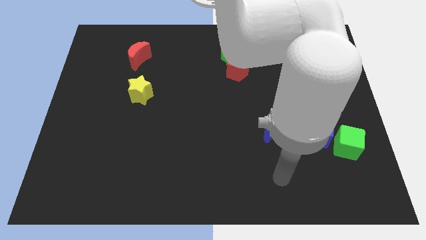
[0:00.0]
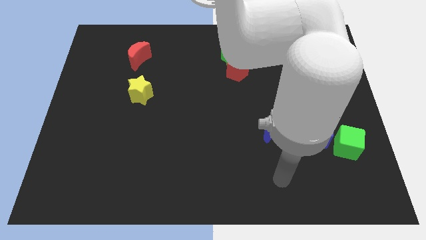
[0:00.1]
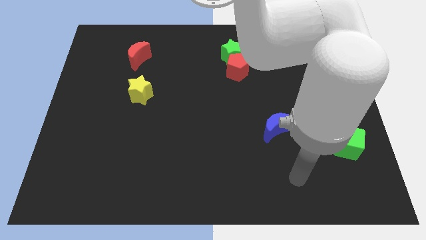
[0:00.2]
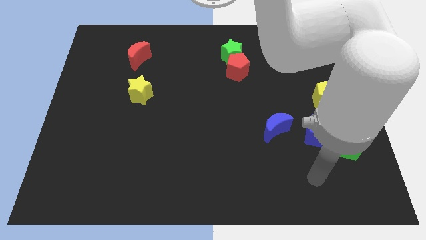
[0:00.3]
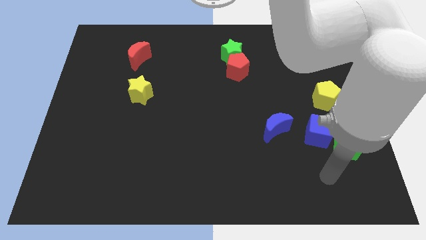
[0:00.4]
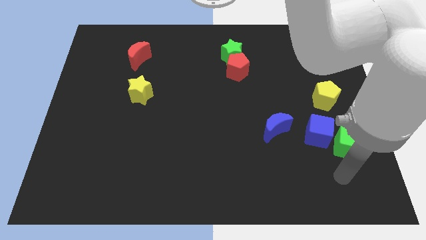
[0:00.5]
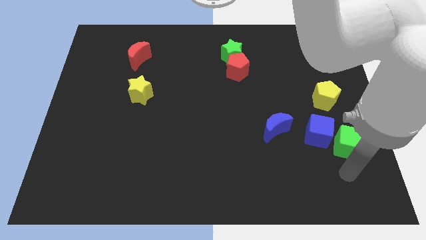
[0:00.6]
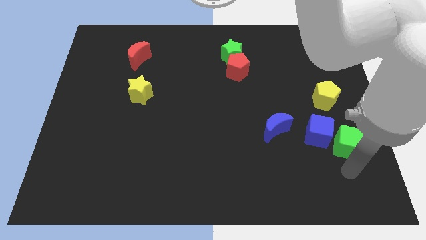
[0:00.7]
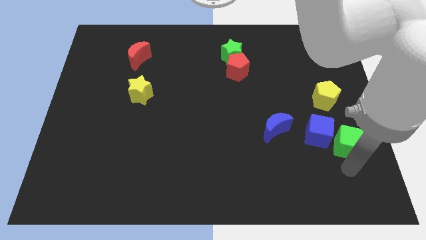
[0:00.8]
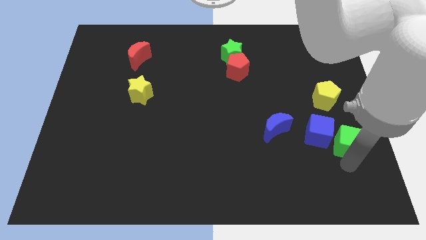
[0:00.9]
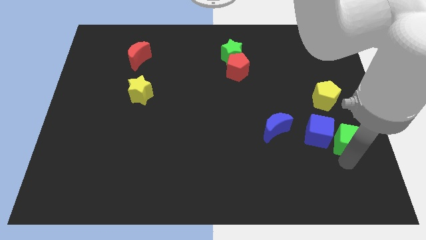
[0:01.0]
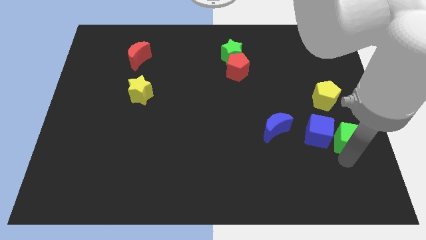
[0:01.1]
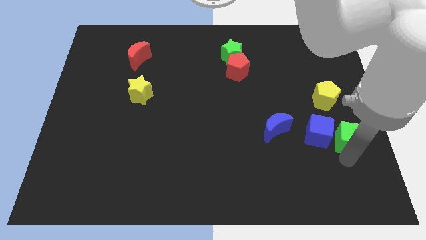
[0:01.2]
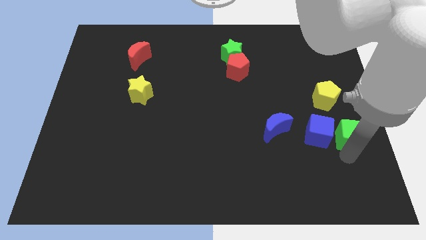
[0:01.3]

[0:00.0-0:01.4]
move your arm to the bottom of the green cube

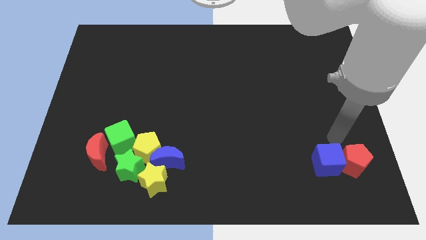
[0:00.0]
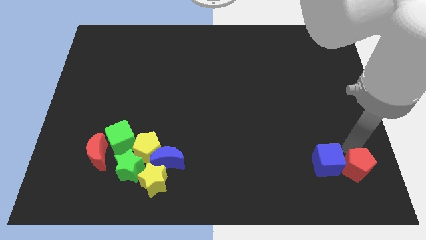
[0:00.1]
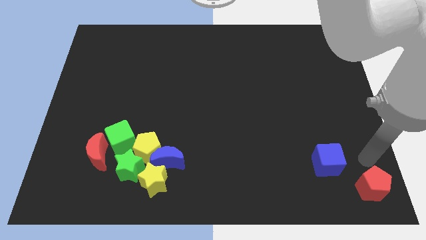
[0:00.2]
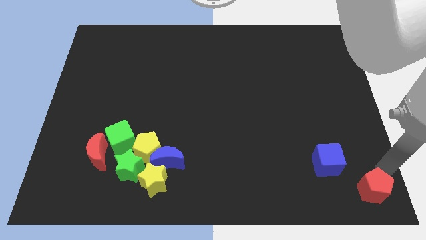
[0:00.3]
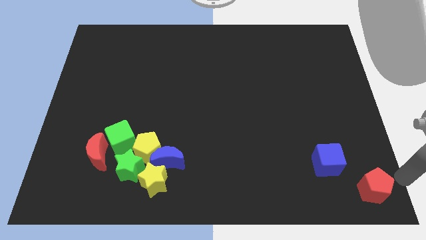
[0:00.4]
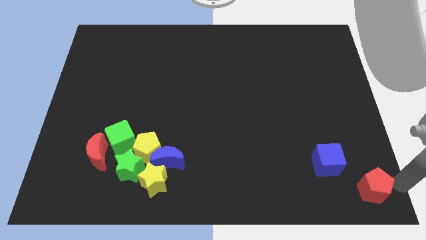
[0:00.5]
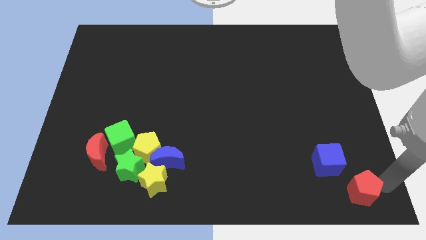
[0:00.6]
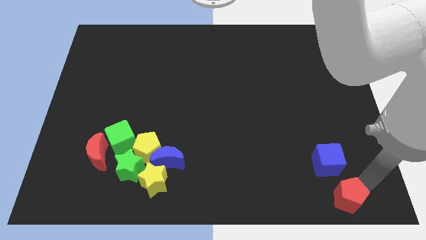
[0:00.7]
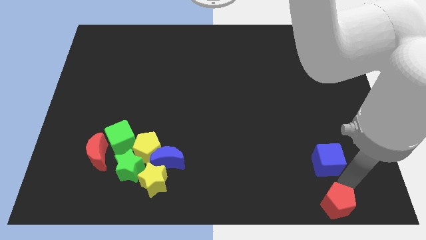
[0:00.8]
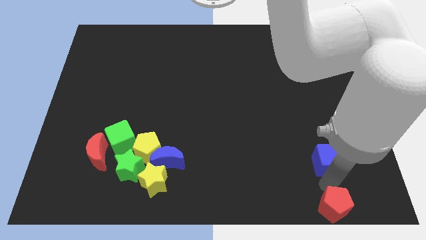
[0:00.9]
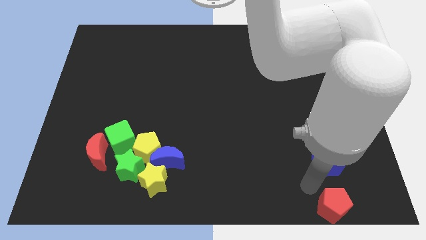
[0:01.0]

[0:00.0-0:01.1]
move the red pentagon to the bottom of the blue cube

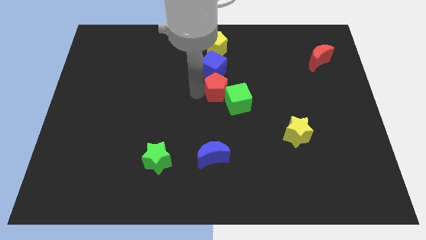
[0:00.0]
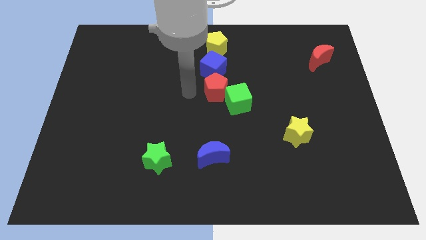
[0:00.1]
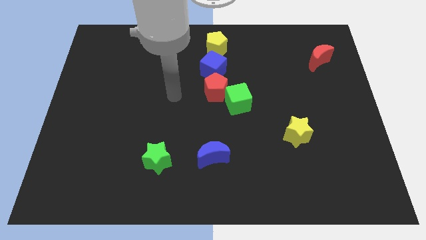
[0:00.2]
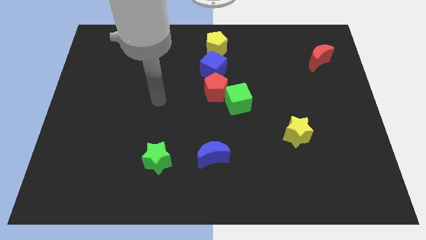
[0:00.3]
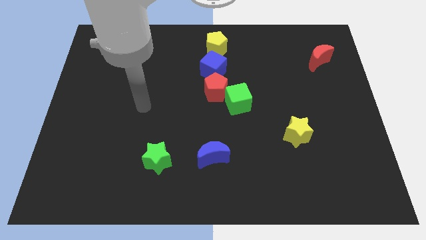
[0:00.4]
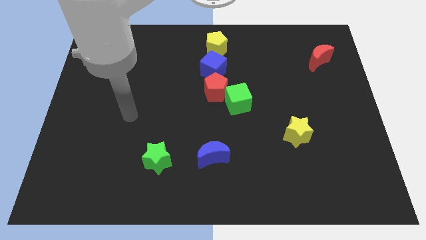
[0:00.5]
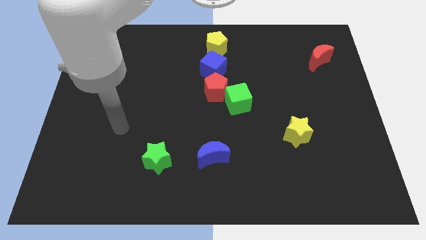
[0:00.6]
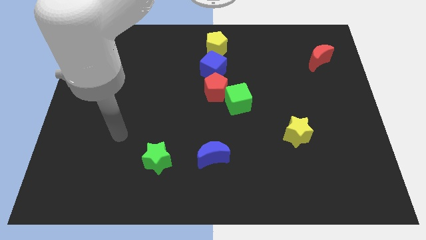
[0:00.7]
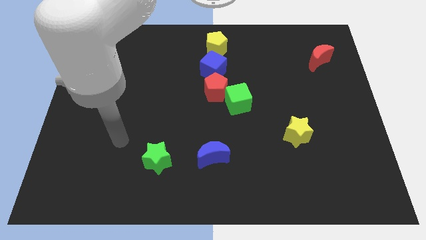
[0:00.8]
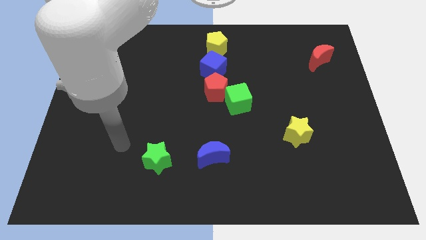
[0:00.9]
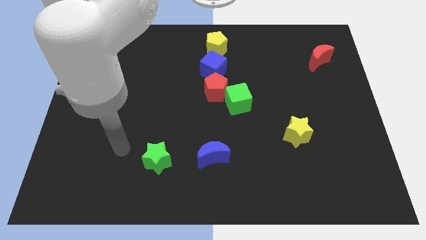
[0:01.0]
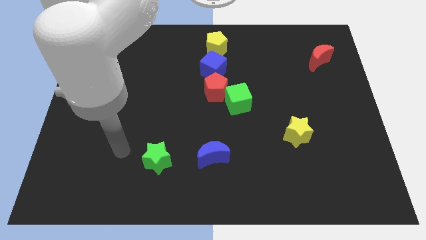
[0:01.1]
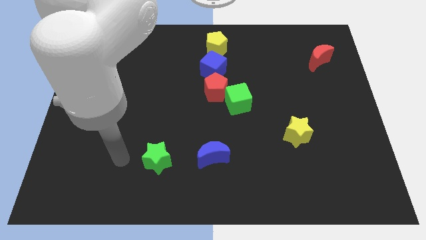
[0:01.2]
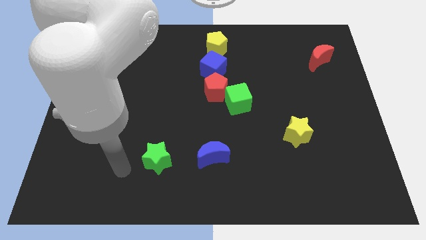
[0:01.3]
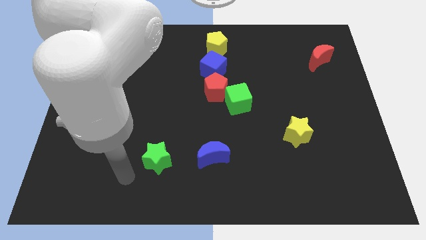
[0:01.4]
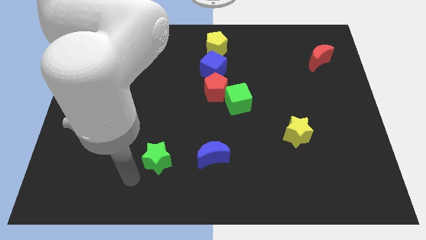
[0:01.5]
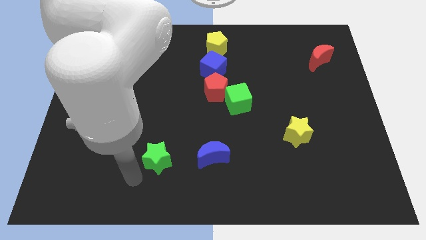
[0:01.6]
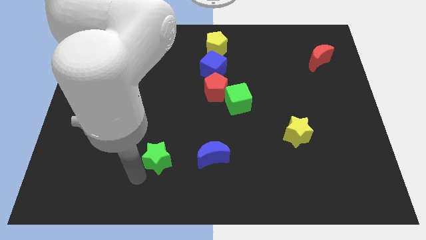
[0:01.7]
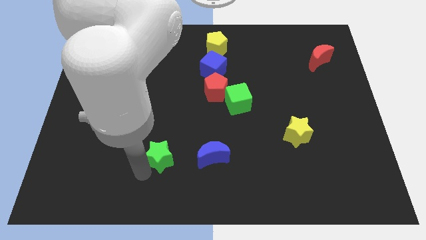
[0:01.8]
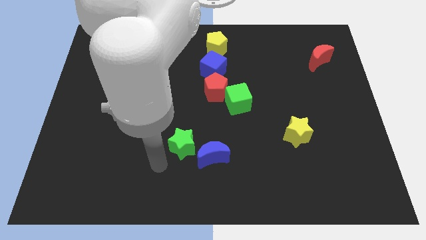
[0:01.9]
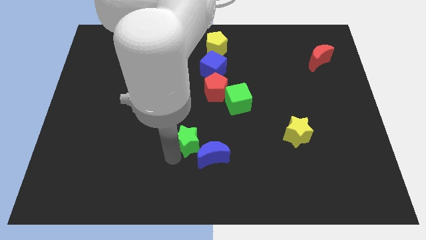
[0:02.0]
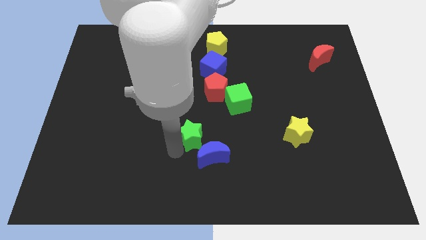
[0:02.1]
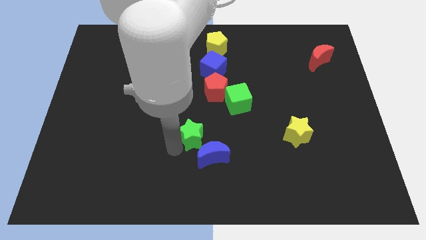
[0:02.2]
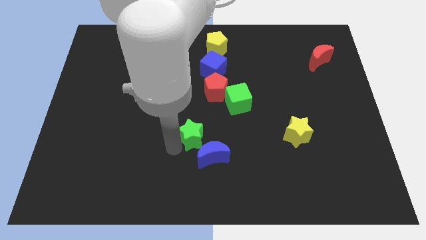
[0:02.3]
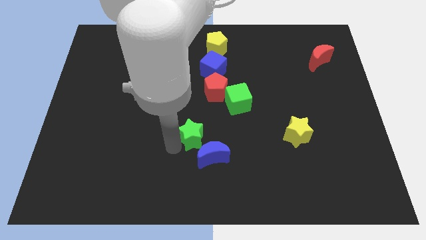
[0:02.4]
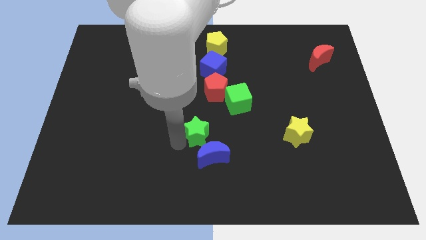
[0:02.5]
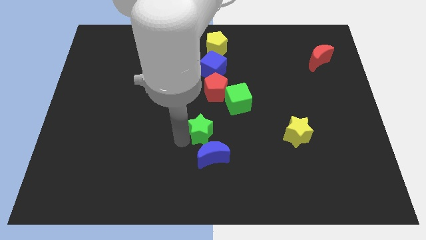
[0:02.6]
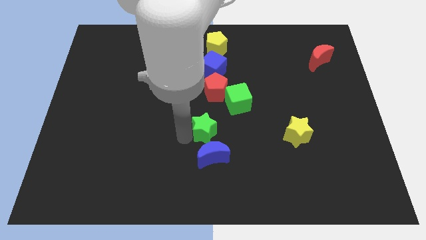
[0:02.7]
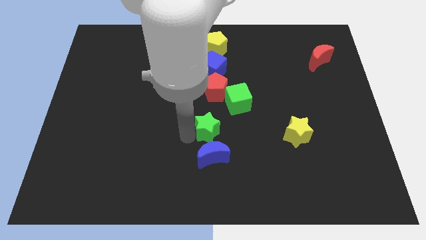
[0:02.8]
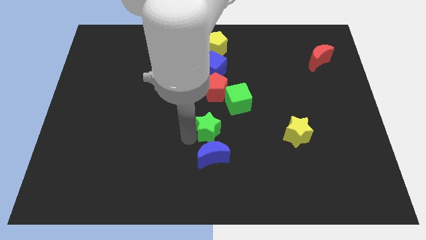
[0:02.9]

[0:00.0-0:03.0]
push the green star to the top of the blue crescent

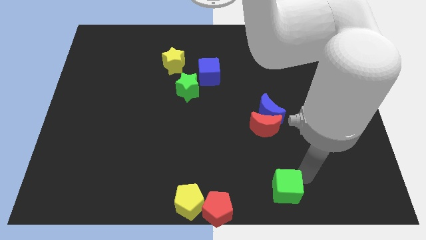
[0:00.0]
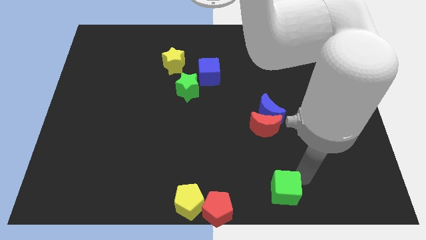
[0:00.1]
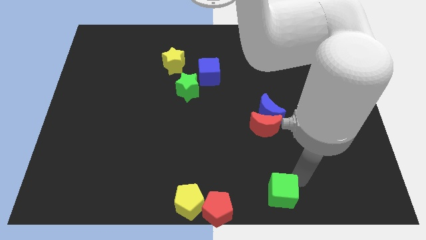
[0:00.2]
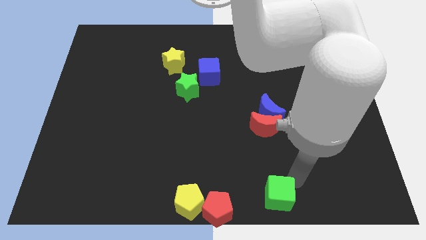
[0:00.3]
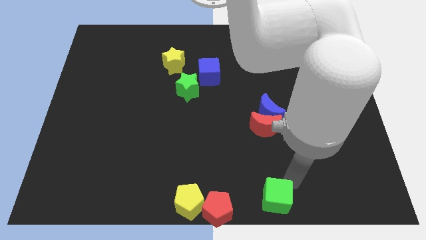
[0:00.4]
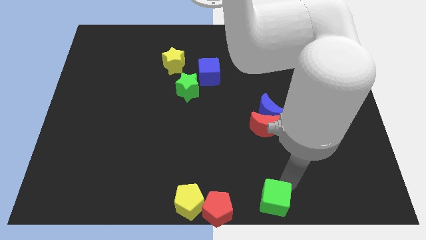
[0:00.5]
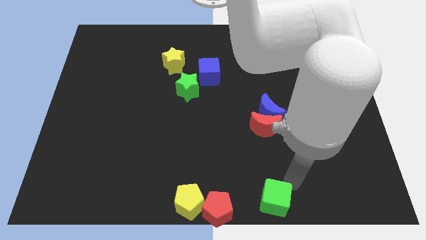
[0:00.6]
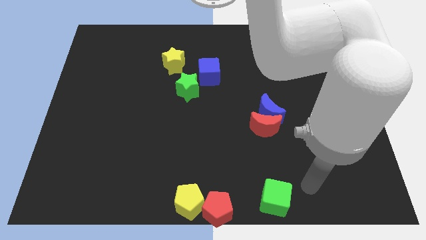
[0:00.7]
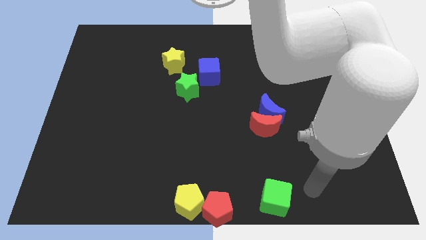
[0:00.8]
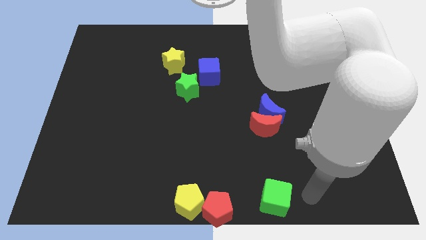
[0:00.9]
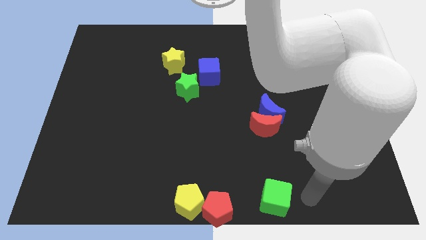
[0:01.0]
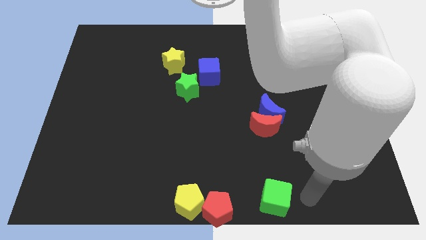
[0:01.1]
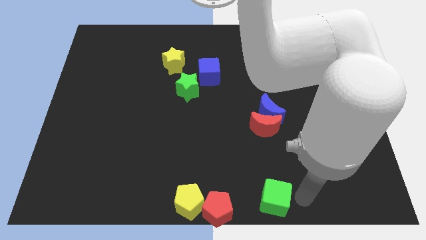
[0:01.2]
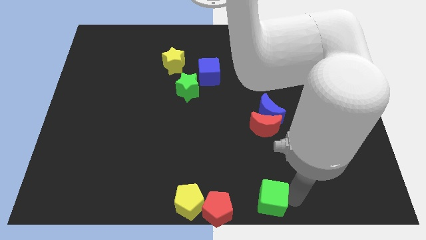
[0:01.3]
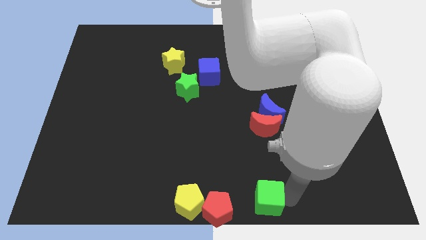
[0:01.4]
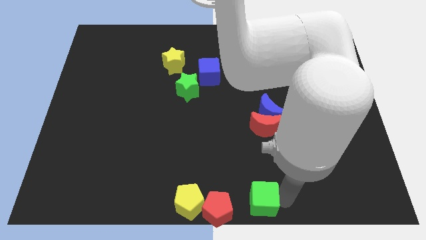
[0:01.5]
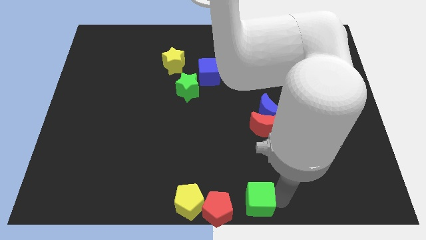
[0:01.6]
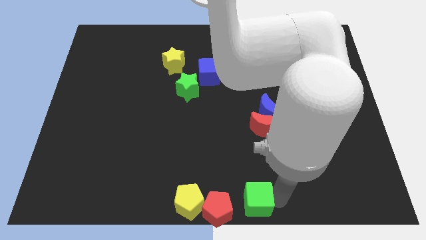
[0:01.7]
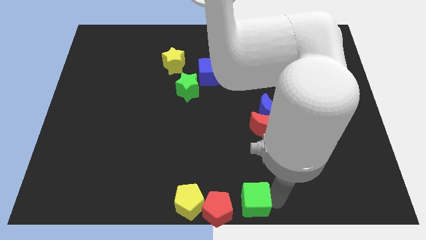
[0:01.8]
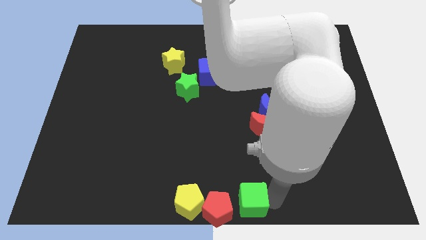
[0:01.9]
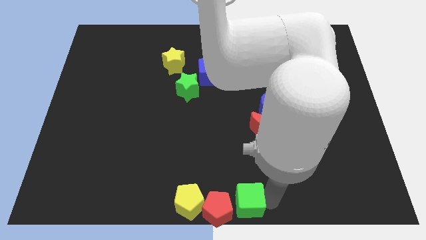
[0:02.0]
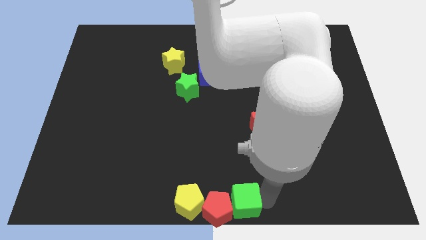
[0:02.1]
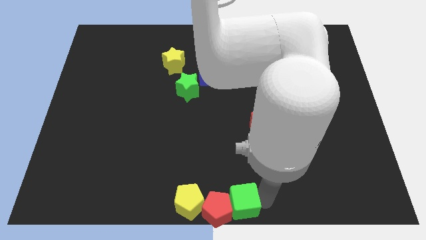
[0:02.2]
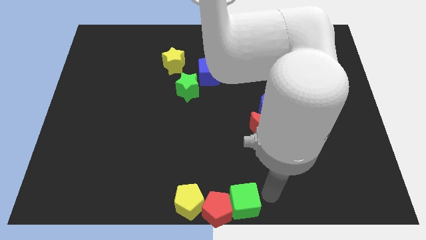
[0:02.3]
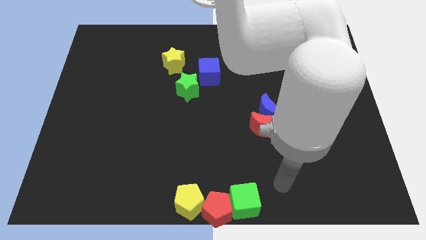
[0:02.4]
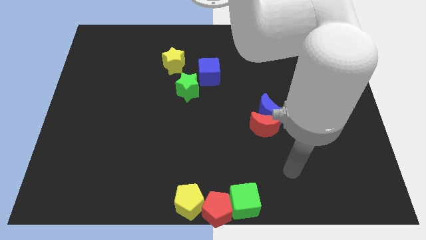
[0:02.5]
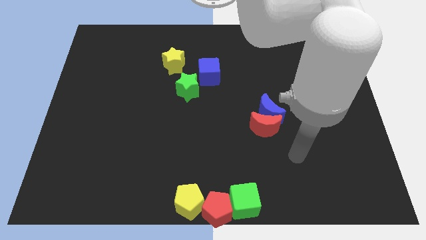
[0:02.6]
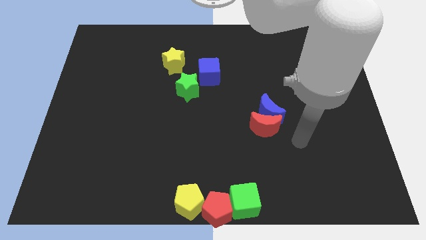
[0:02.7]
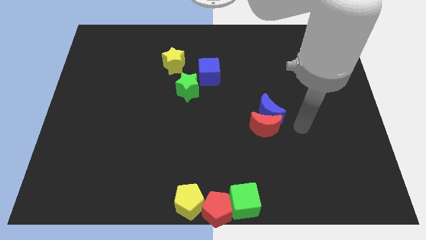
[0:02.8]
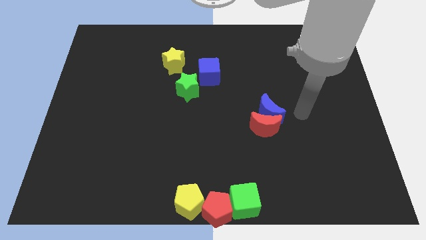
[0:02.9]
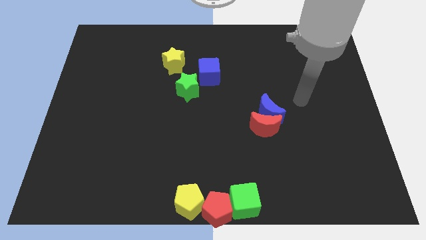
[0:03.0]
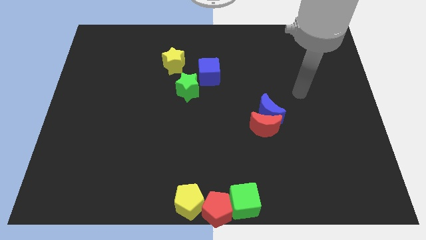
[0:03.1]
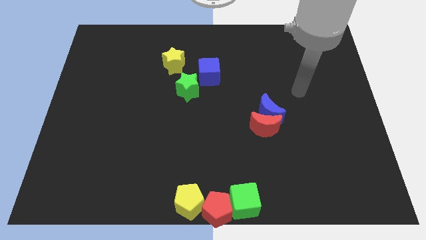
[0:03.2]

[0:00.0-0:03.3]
push the green cube into the red pentagon

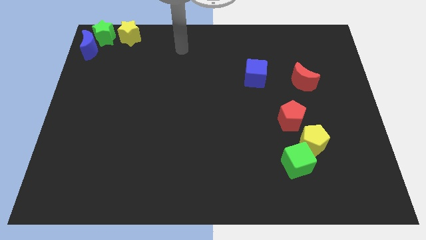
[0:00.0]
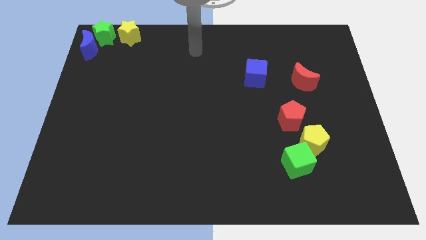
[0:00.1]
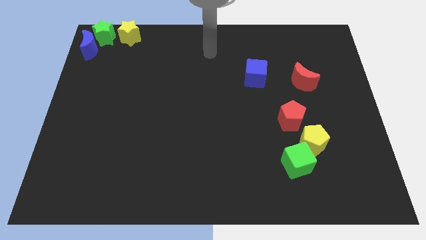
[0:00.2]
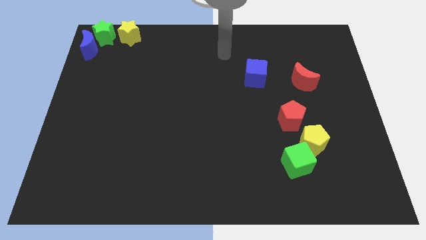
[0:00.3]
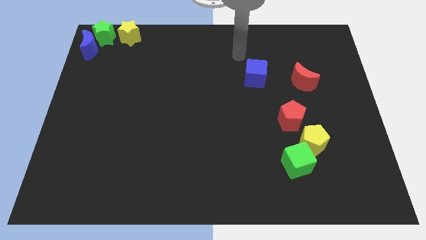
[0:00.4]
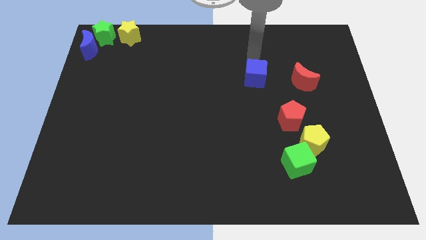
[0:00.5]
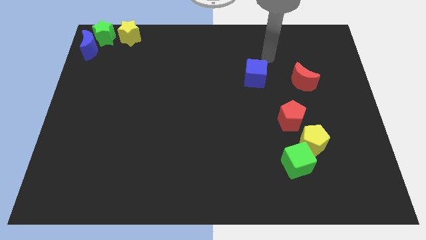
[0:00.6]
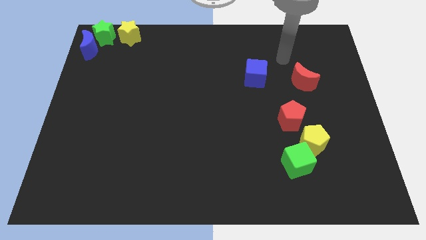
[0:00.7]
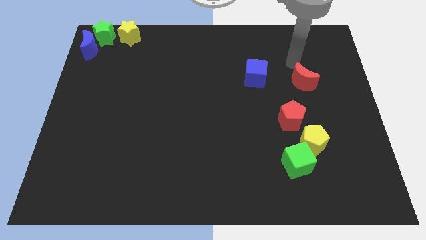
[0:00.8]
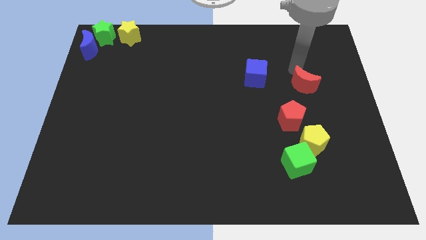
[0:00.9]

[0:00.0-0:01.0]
move your arm to the top of red moon
